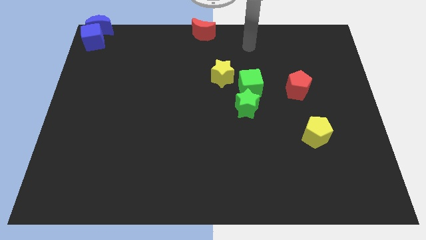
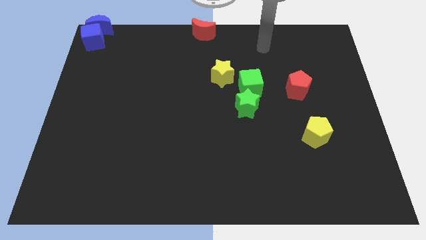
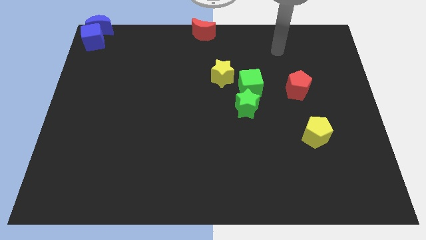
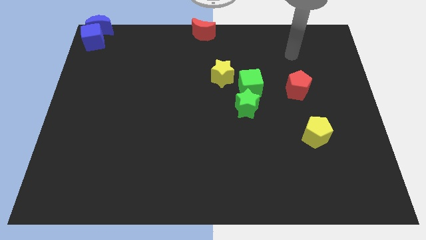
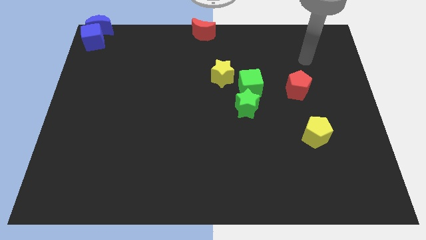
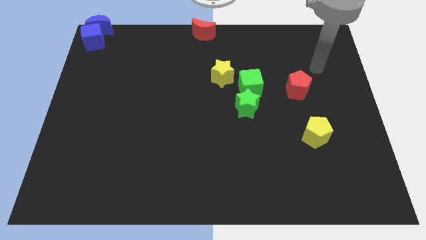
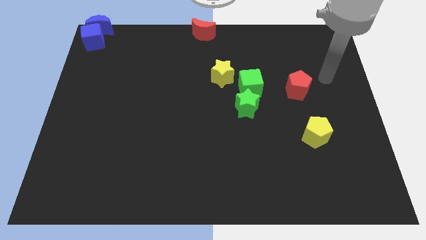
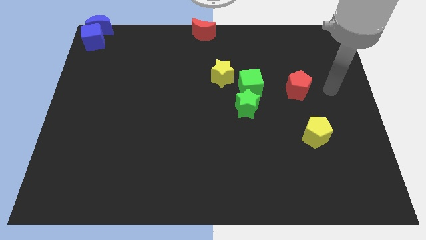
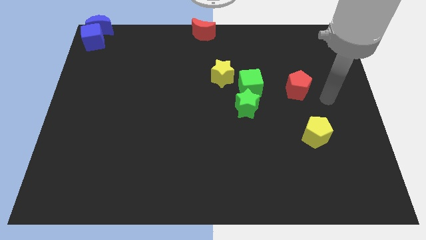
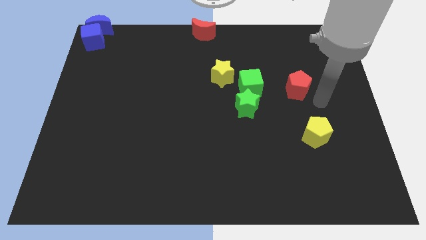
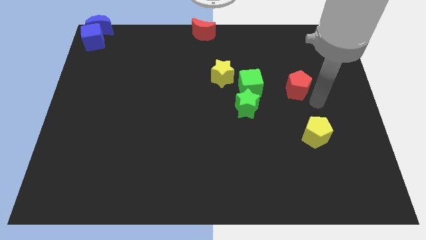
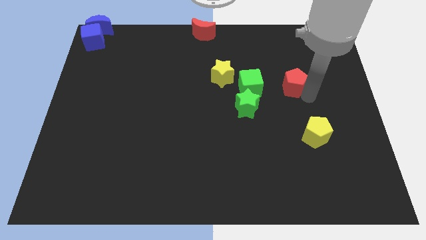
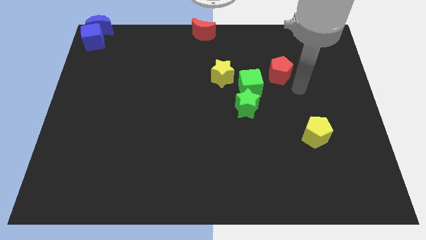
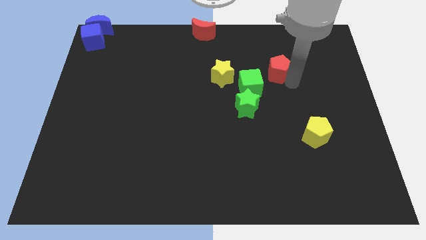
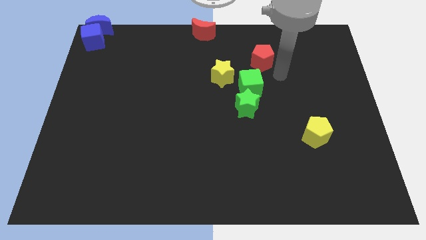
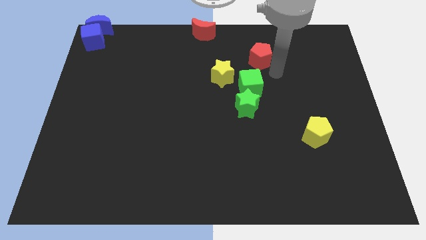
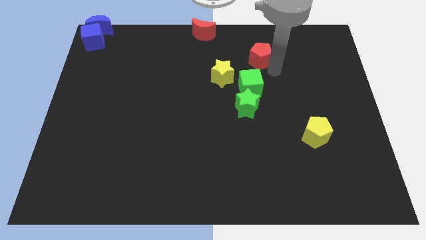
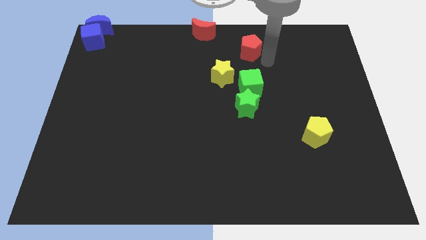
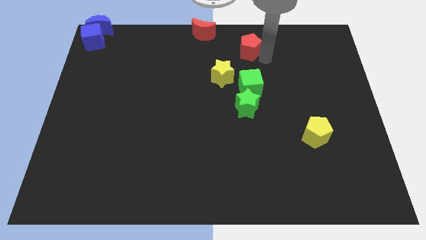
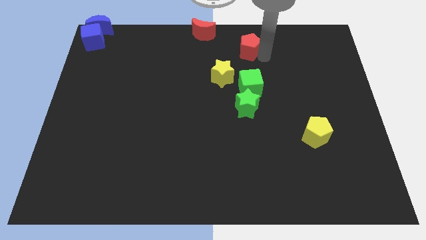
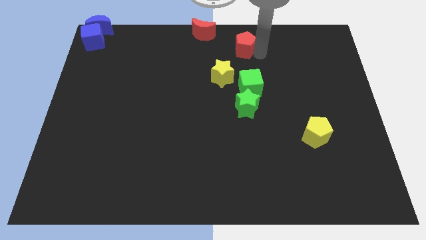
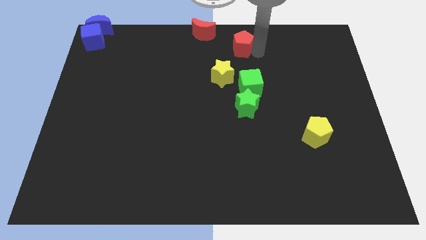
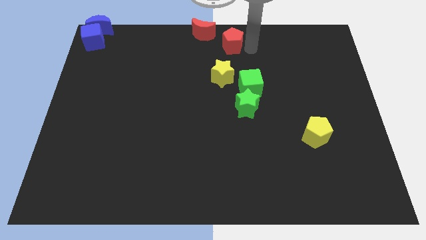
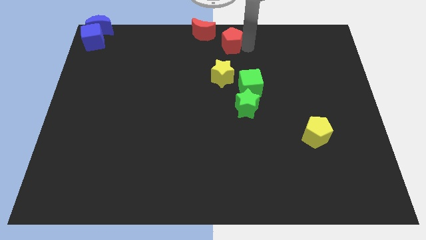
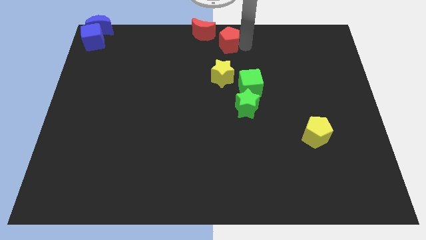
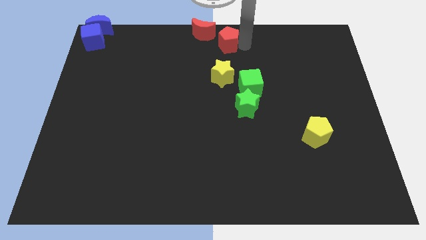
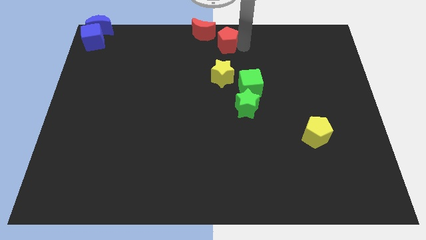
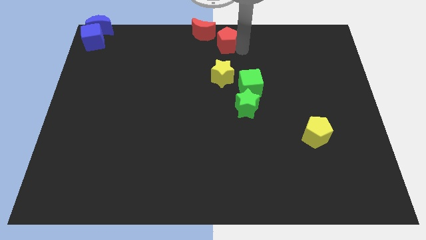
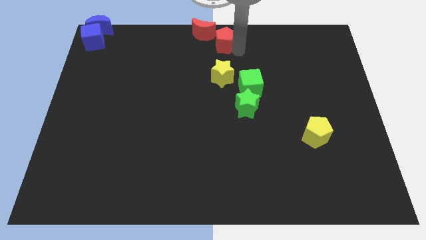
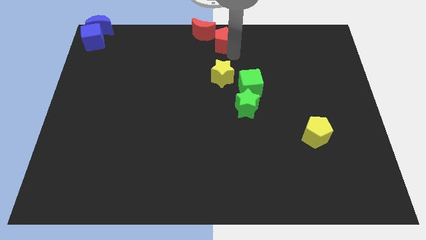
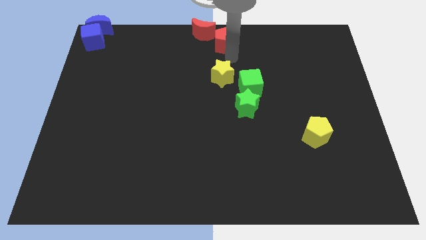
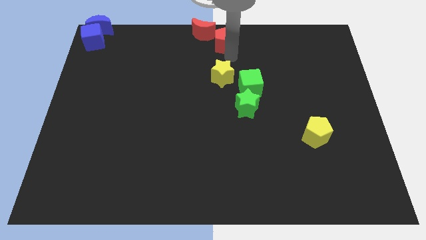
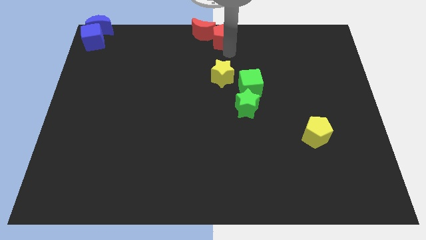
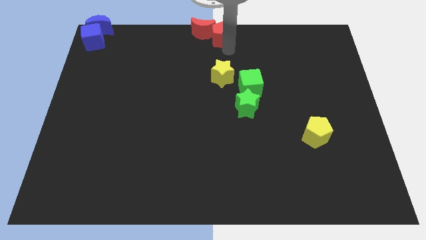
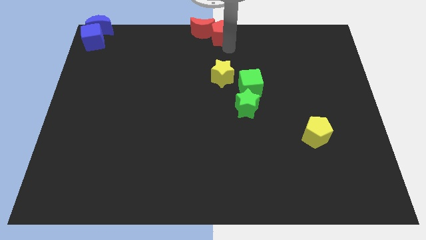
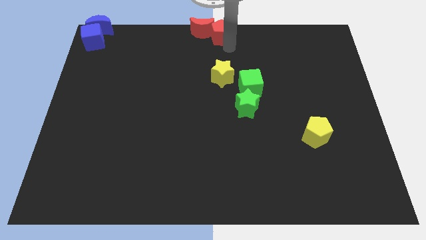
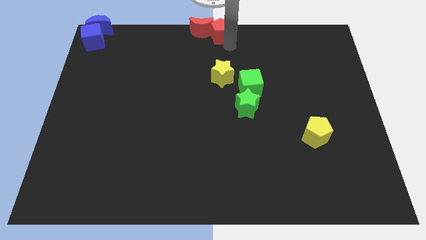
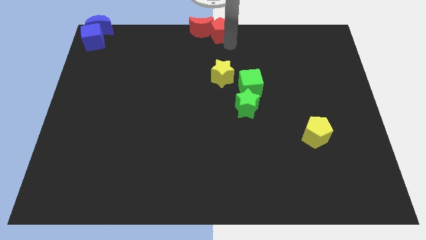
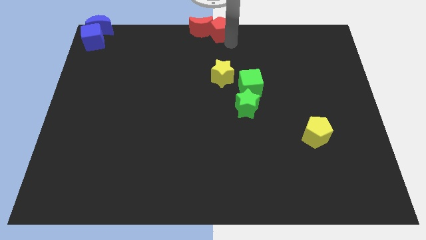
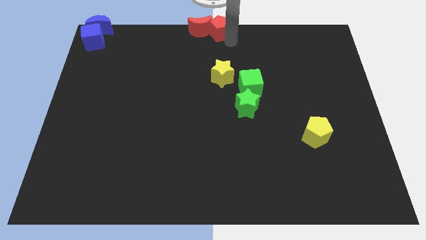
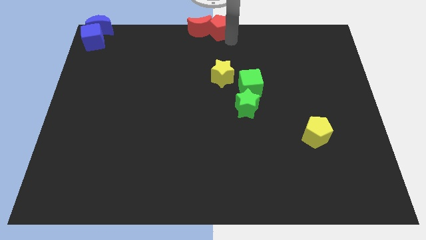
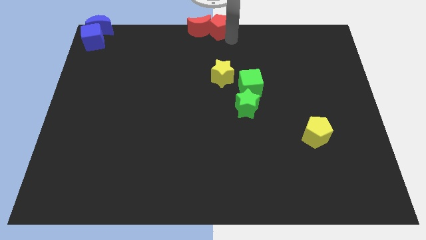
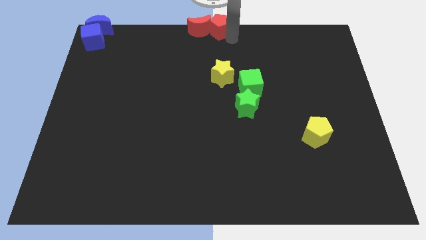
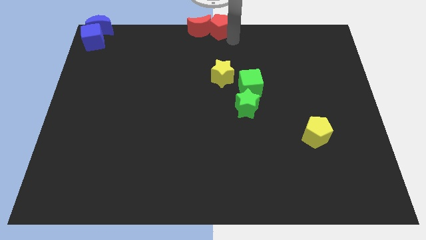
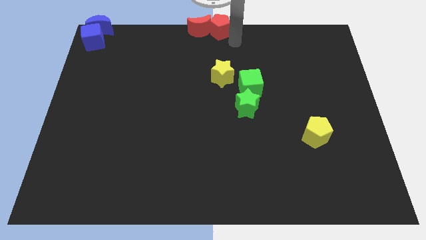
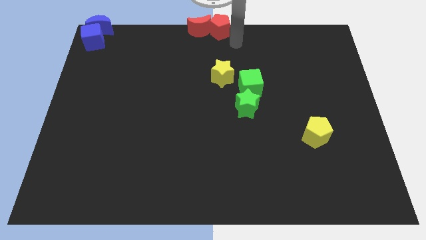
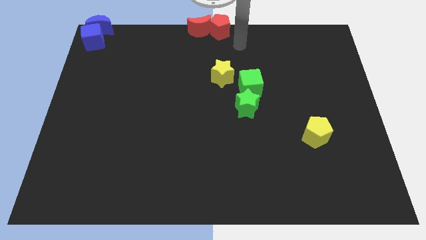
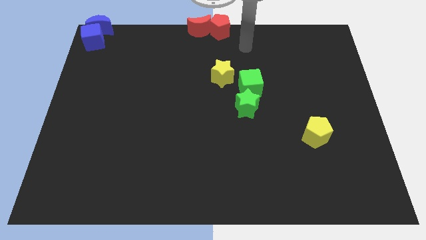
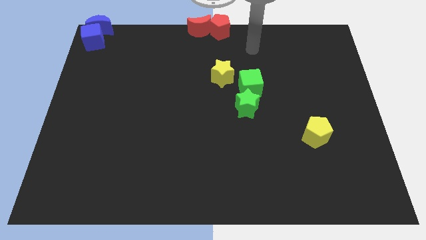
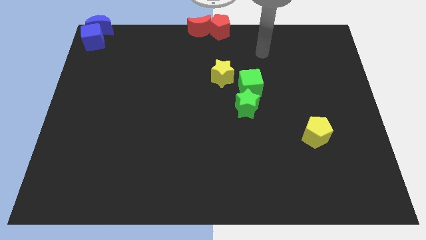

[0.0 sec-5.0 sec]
place the red pentagon to the top center of the board

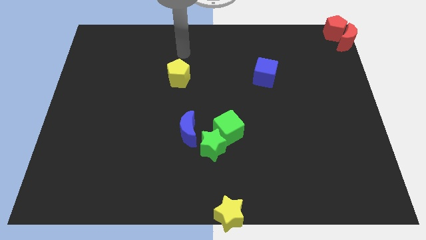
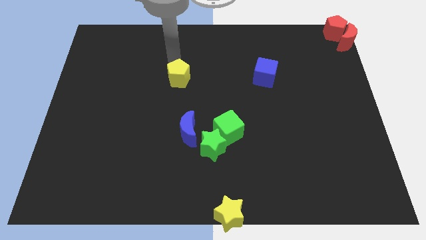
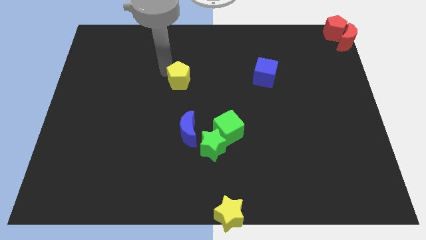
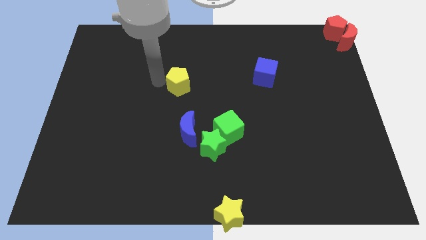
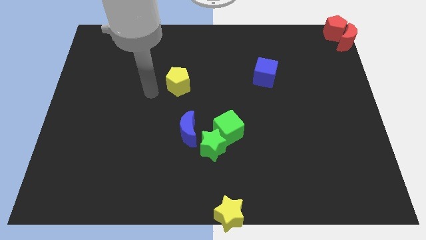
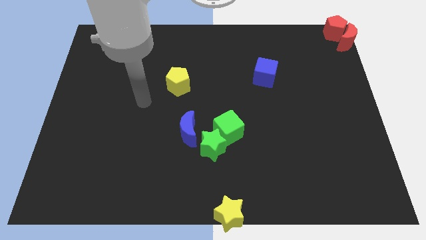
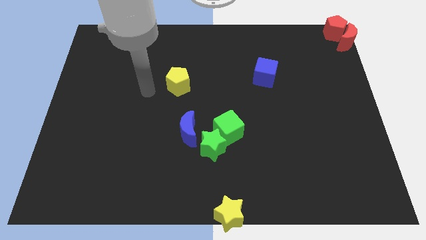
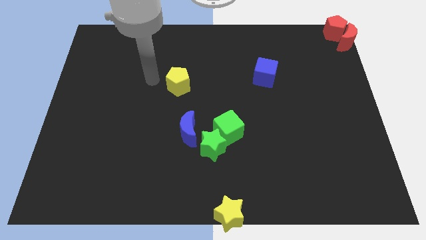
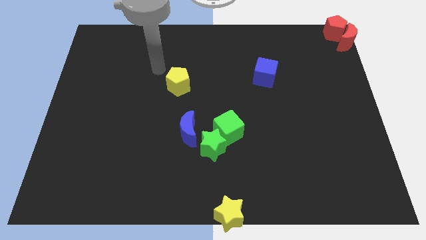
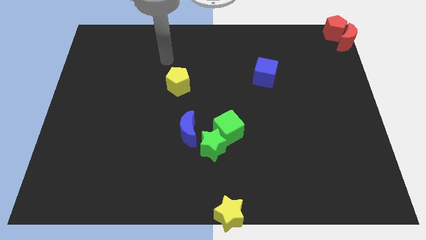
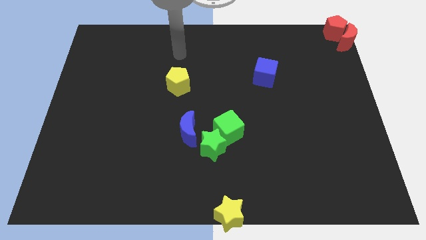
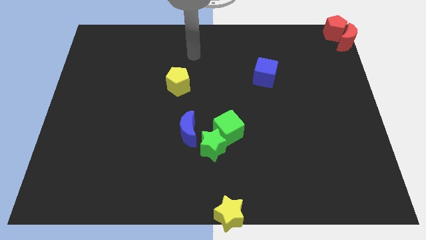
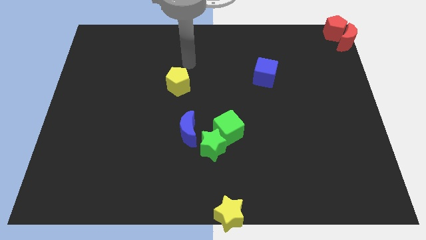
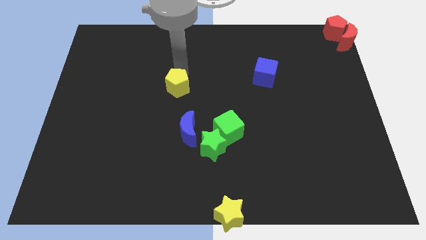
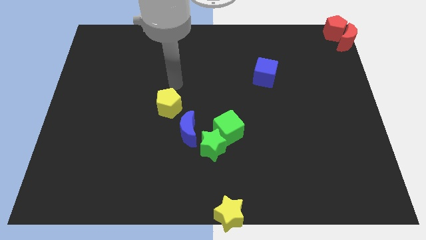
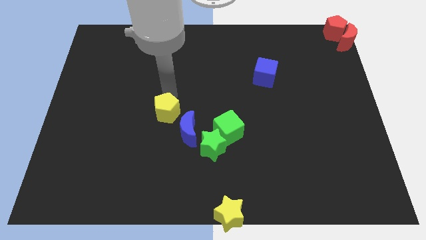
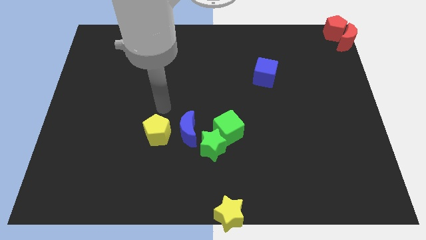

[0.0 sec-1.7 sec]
push the yellow pentagon to the left side of the blue crescent

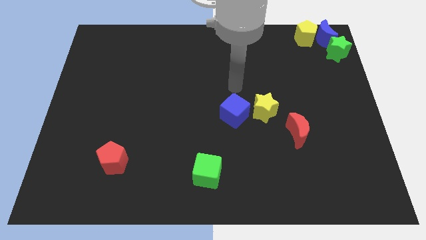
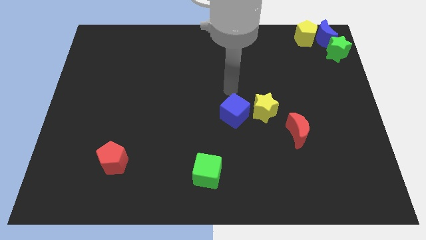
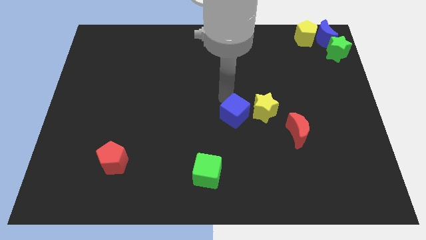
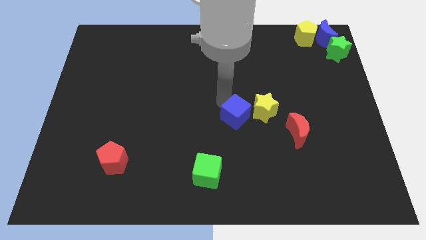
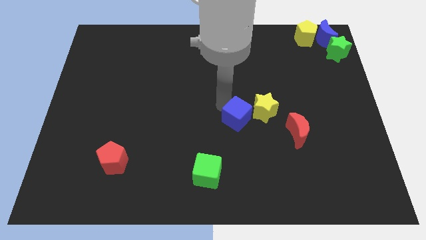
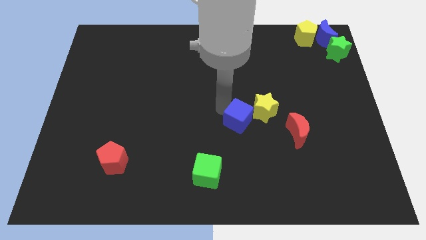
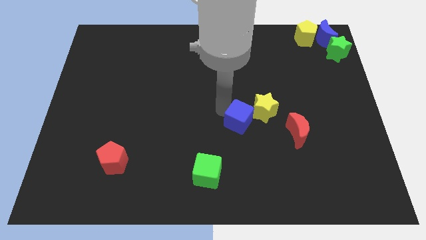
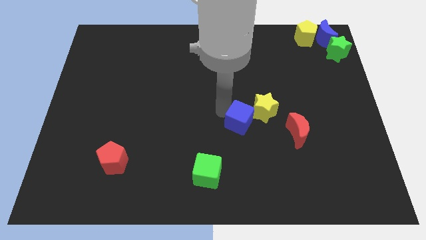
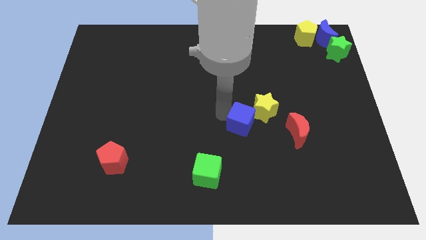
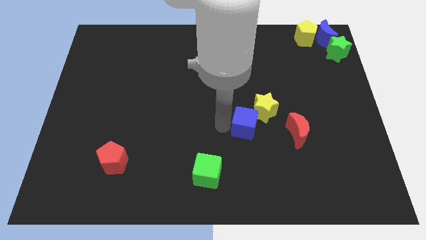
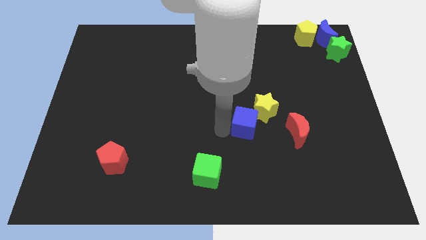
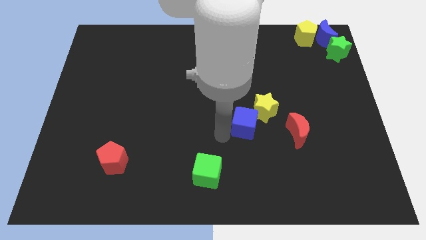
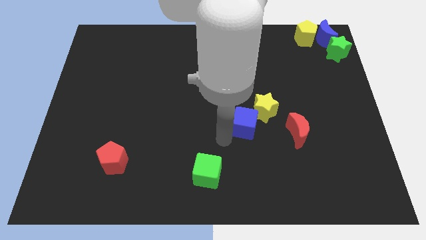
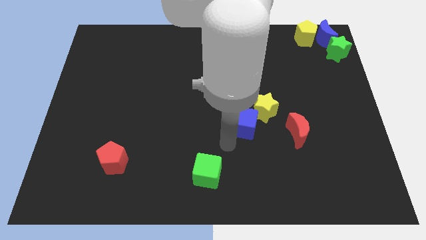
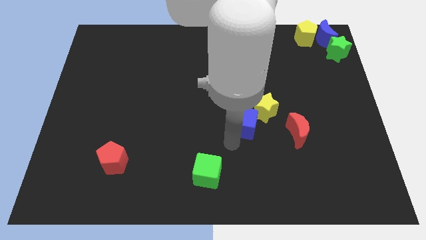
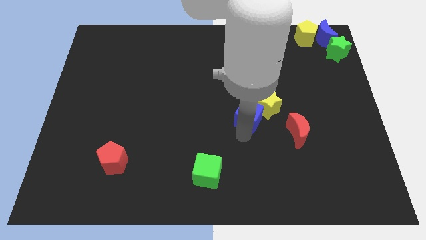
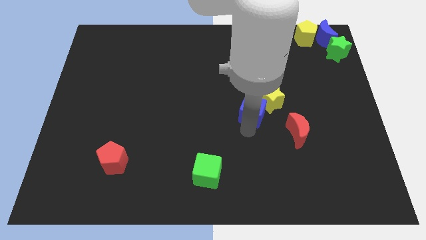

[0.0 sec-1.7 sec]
push the blue cube into the yellow star

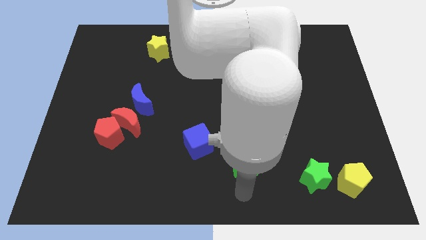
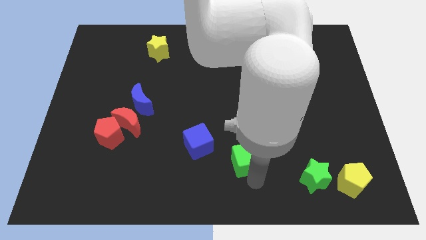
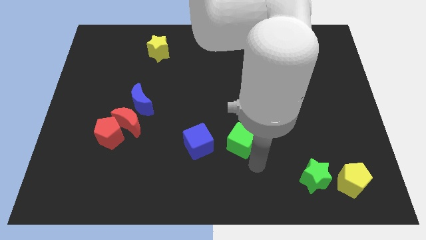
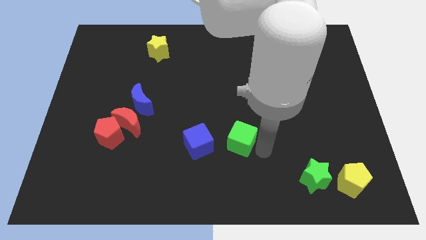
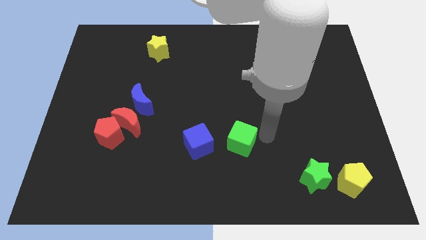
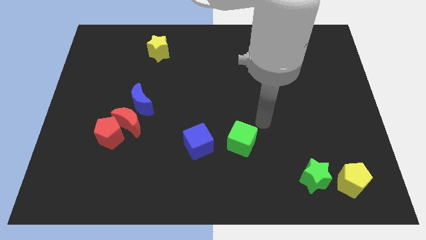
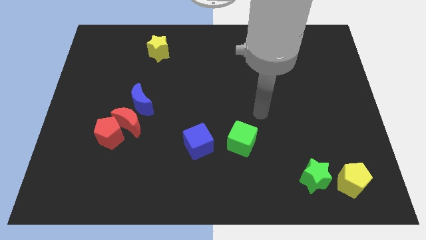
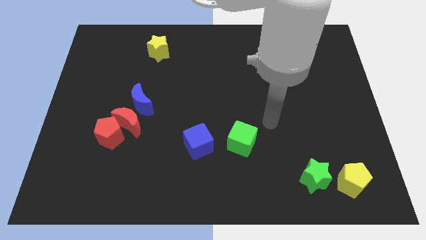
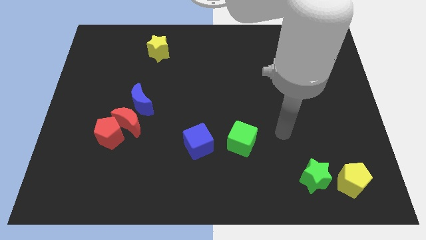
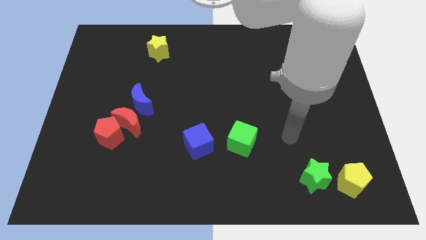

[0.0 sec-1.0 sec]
move green cube parallel right to blue cube
